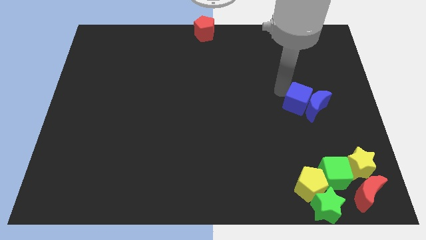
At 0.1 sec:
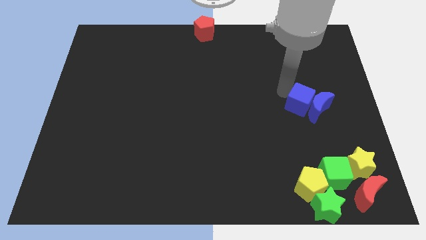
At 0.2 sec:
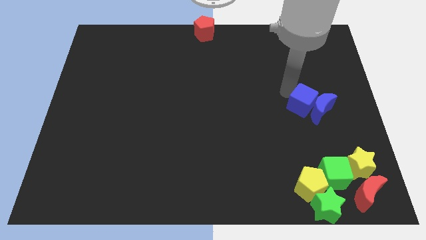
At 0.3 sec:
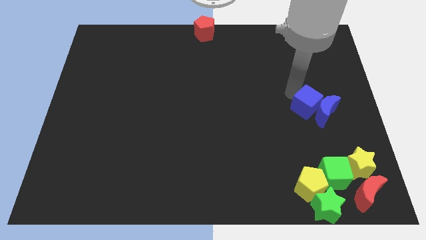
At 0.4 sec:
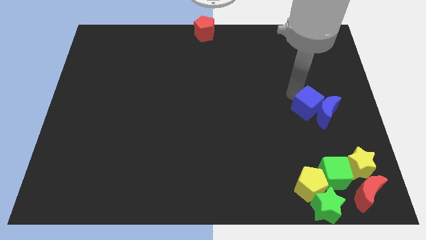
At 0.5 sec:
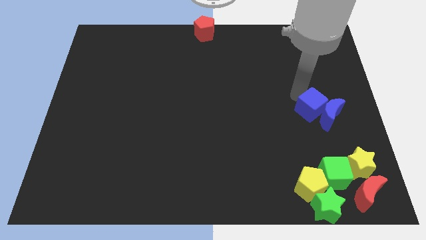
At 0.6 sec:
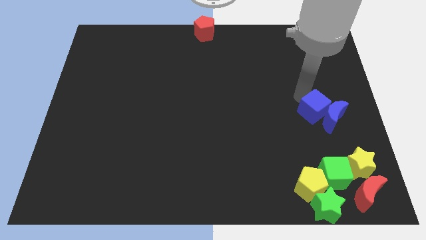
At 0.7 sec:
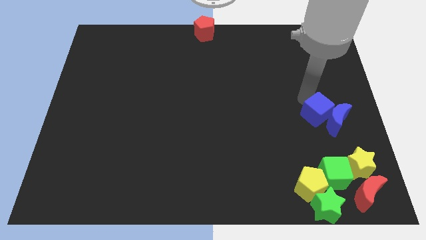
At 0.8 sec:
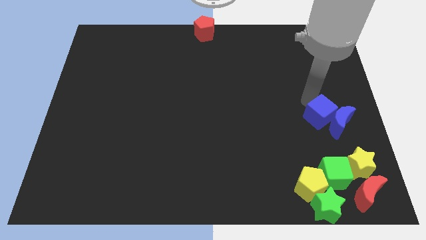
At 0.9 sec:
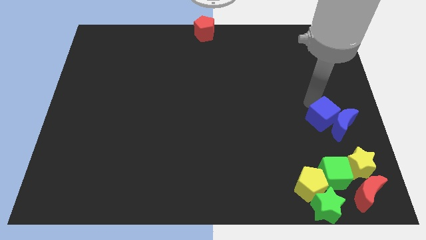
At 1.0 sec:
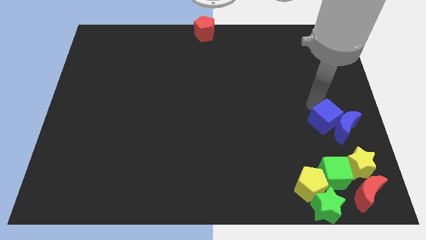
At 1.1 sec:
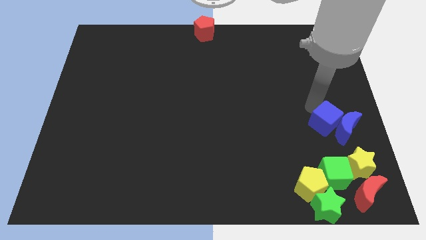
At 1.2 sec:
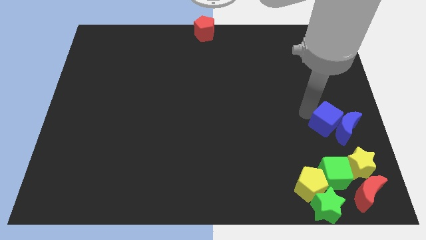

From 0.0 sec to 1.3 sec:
move the blue cube and blue crescent towards the bottom left center of the board

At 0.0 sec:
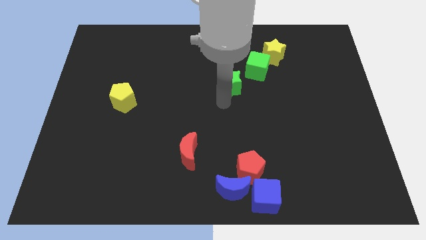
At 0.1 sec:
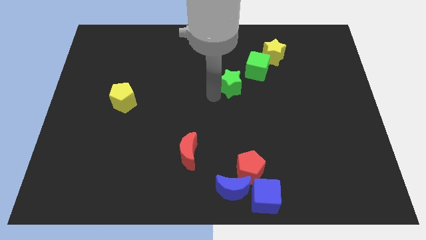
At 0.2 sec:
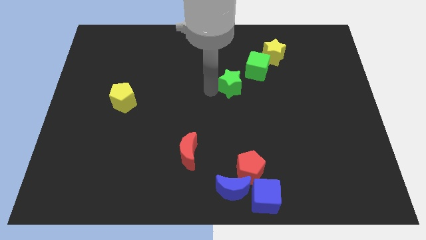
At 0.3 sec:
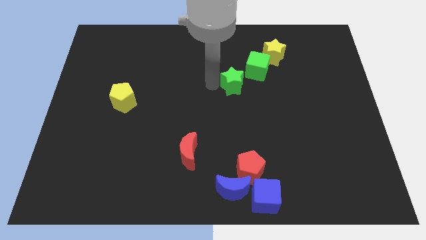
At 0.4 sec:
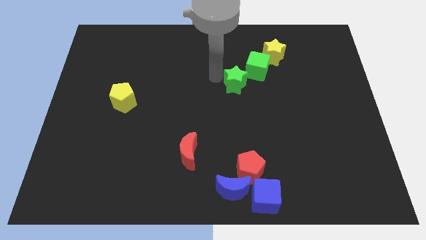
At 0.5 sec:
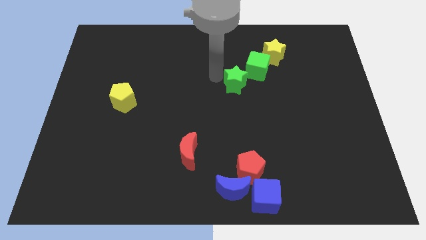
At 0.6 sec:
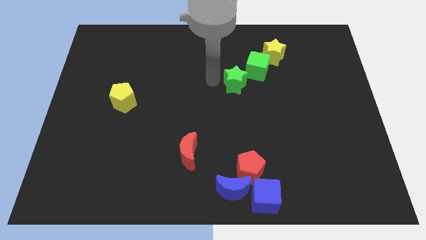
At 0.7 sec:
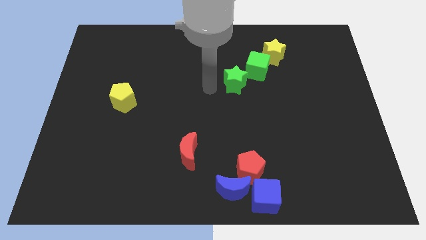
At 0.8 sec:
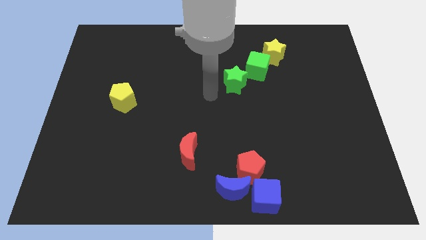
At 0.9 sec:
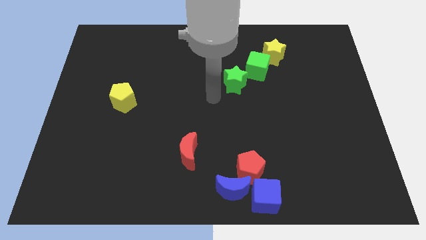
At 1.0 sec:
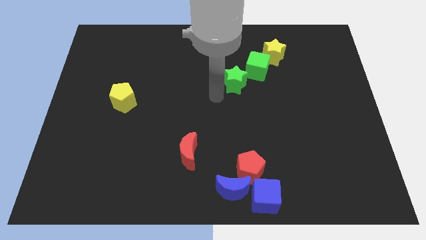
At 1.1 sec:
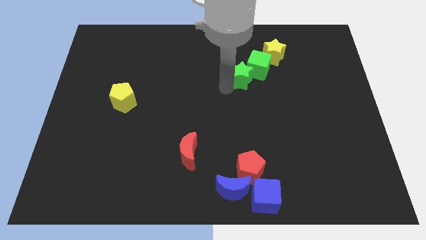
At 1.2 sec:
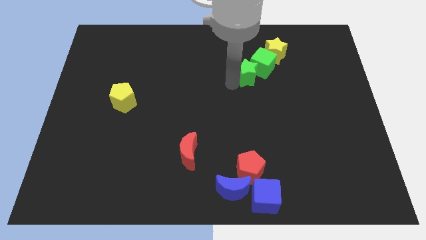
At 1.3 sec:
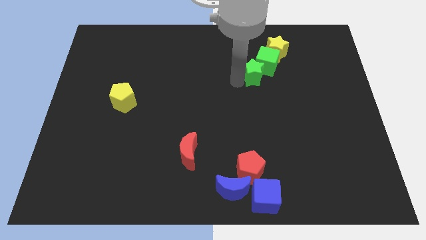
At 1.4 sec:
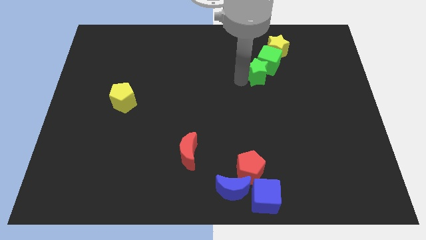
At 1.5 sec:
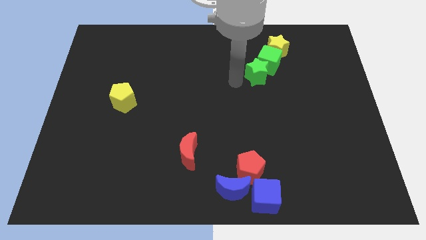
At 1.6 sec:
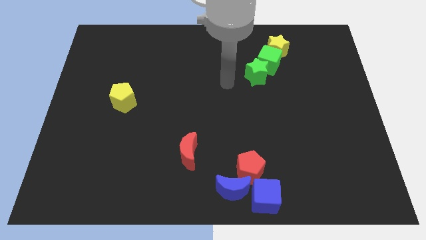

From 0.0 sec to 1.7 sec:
push green star into green cube

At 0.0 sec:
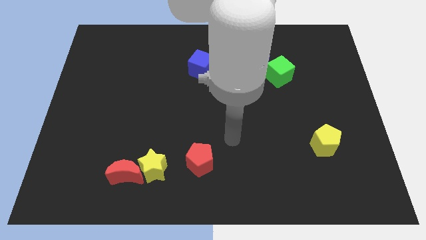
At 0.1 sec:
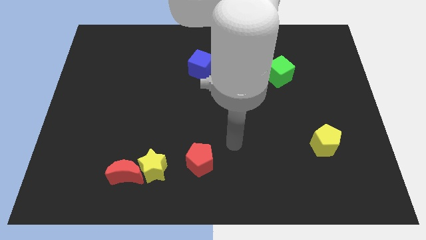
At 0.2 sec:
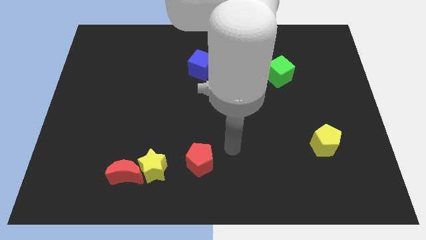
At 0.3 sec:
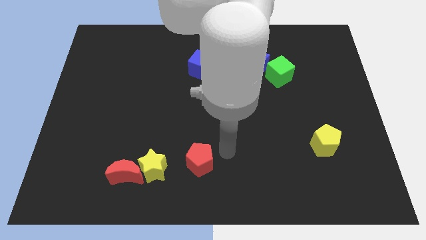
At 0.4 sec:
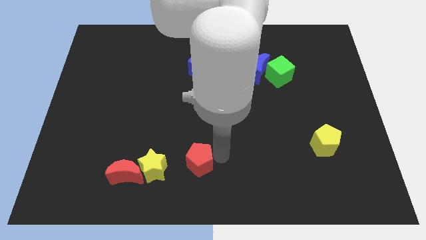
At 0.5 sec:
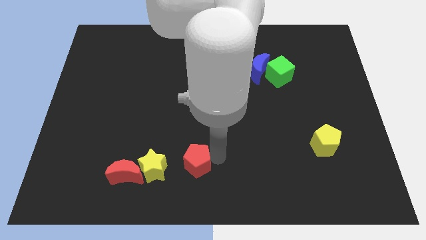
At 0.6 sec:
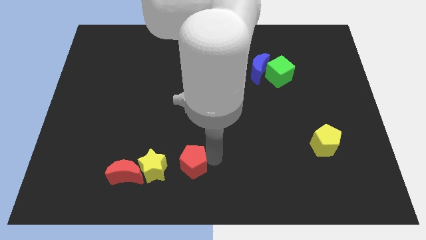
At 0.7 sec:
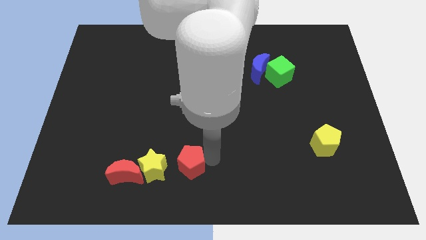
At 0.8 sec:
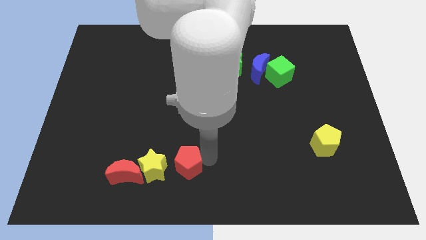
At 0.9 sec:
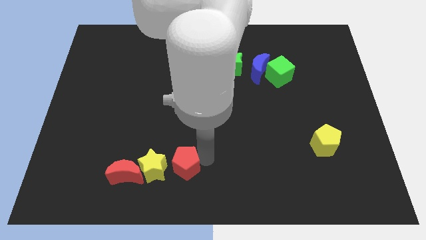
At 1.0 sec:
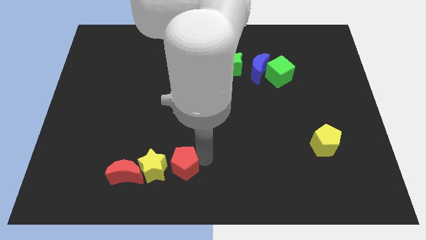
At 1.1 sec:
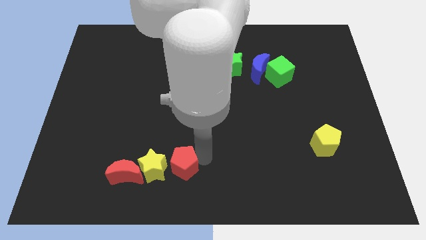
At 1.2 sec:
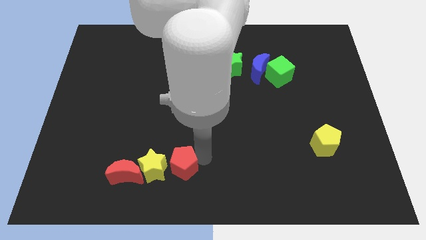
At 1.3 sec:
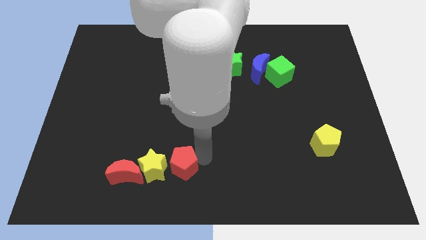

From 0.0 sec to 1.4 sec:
place the red pentagon next to the yellow star

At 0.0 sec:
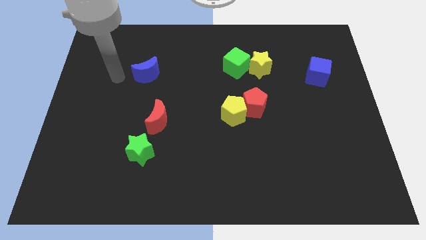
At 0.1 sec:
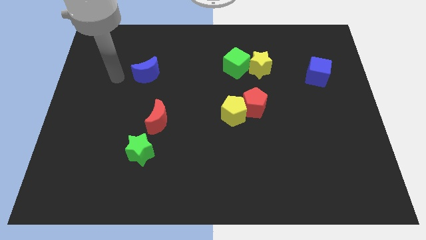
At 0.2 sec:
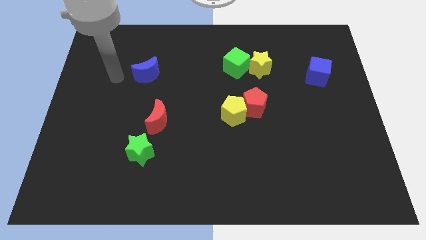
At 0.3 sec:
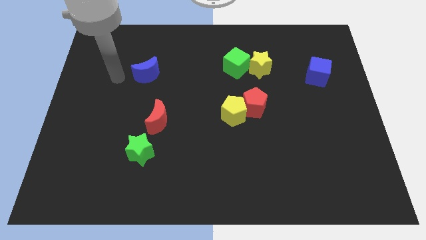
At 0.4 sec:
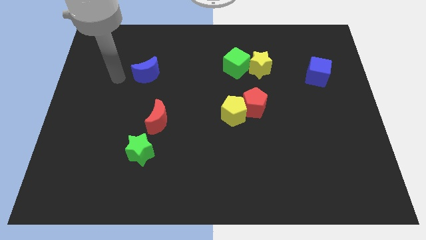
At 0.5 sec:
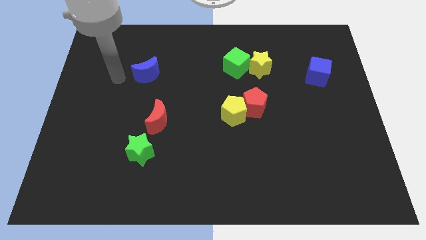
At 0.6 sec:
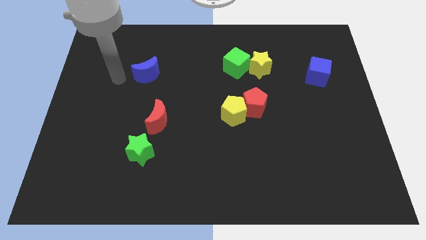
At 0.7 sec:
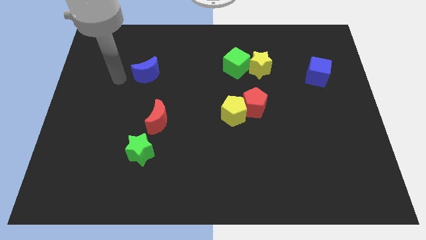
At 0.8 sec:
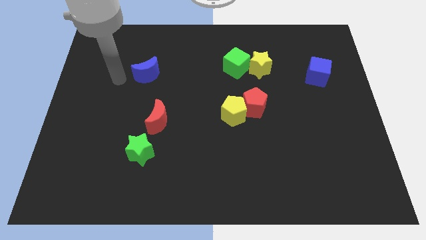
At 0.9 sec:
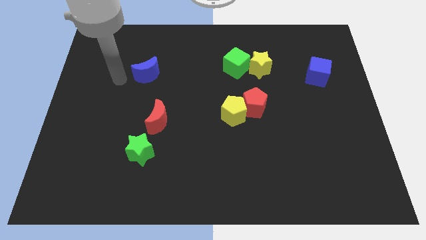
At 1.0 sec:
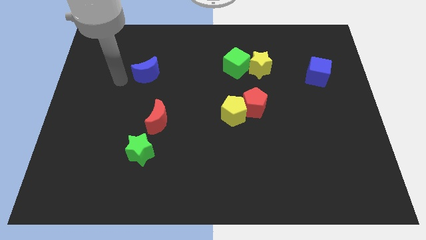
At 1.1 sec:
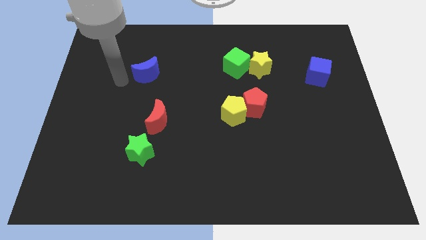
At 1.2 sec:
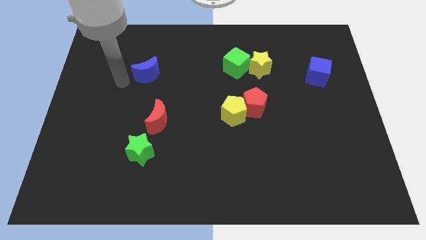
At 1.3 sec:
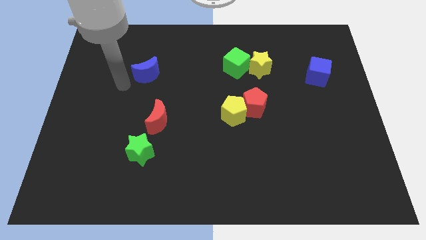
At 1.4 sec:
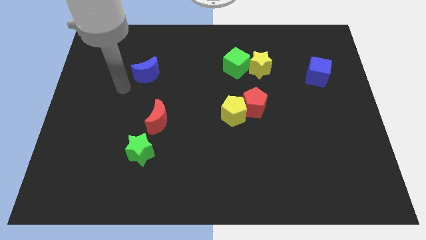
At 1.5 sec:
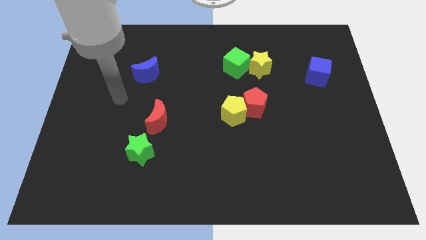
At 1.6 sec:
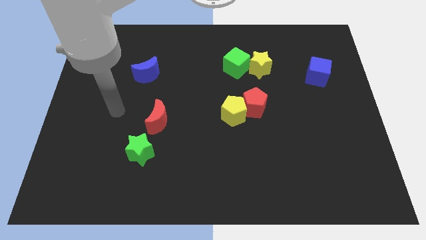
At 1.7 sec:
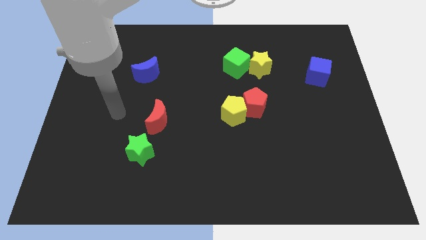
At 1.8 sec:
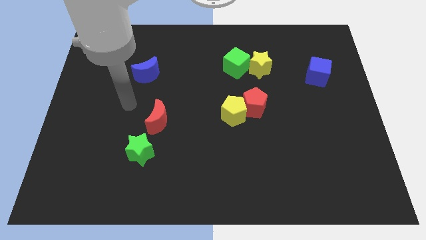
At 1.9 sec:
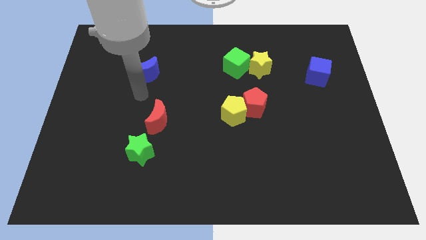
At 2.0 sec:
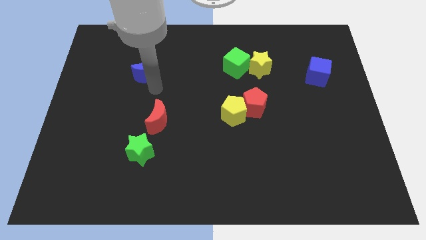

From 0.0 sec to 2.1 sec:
put your hand vertically below the blue crescent

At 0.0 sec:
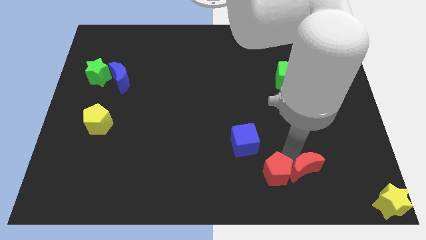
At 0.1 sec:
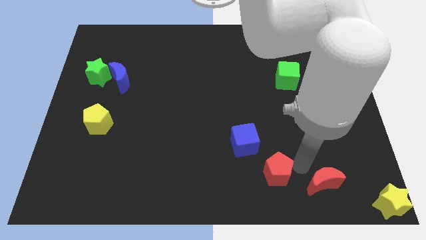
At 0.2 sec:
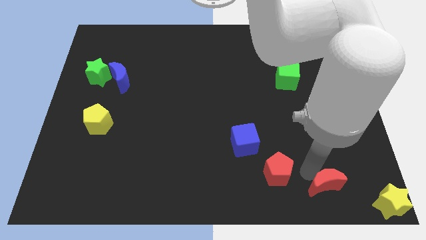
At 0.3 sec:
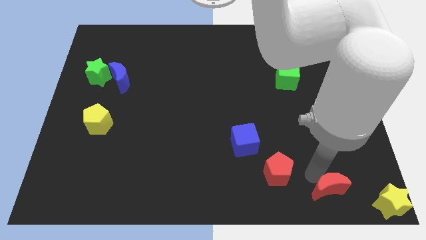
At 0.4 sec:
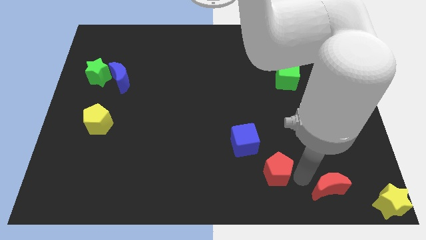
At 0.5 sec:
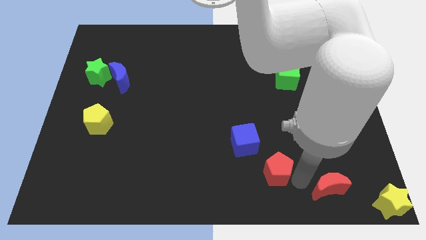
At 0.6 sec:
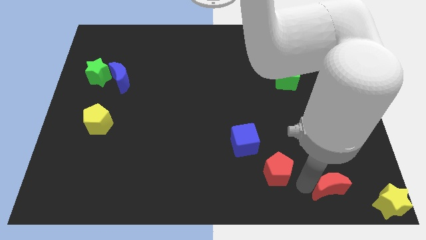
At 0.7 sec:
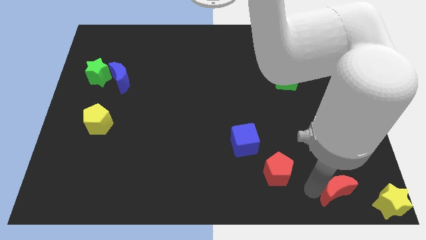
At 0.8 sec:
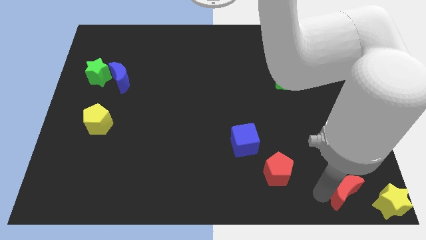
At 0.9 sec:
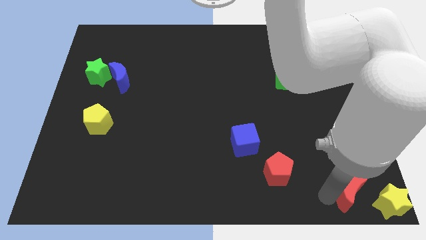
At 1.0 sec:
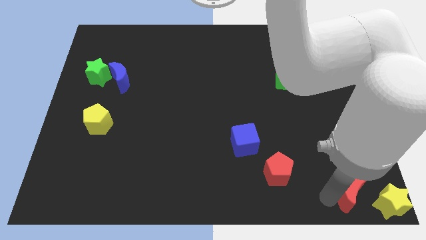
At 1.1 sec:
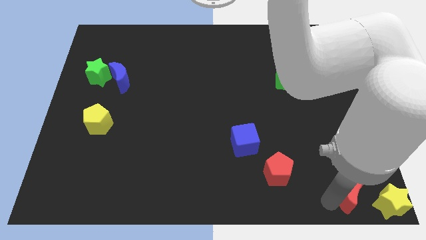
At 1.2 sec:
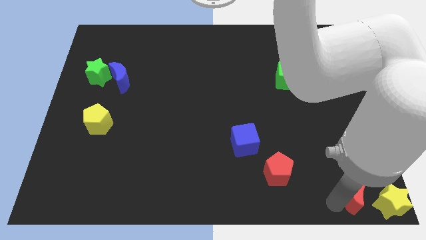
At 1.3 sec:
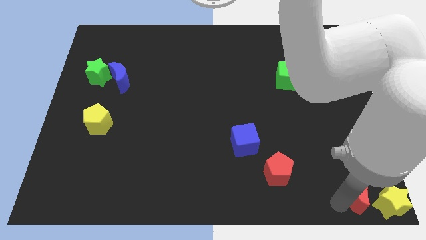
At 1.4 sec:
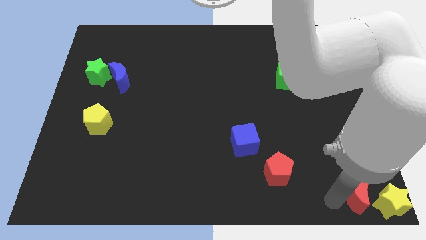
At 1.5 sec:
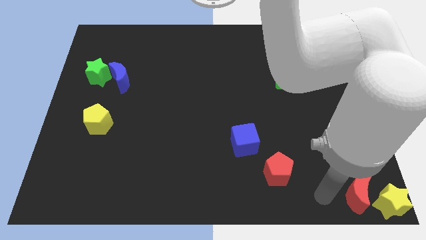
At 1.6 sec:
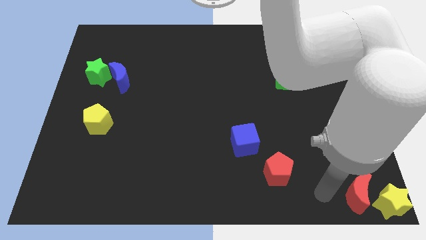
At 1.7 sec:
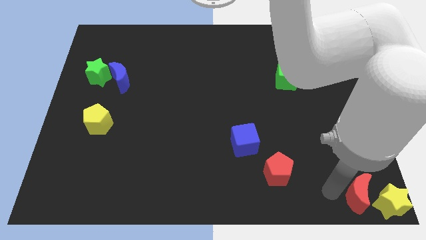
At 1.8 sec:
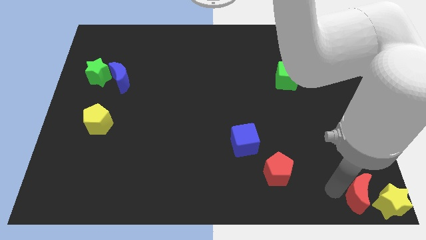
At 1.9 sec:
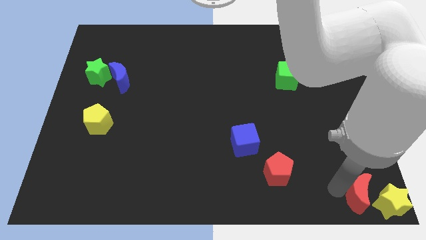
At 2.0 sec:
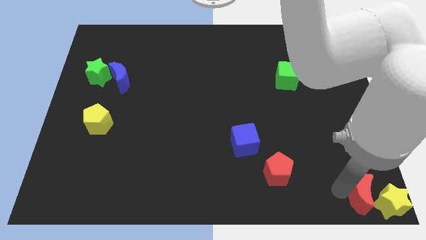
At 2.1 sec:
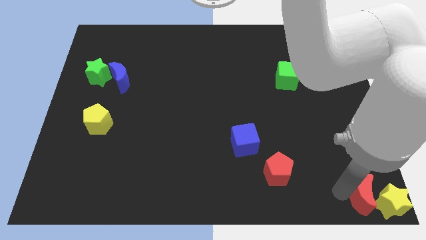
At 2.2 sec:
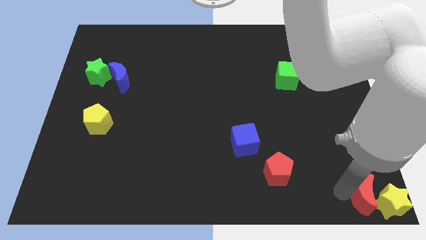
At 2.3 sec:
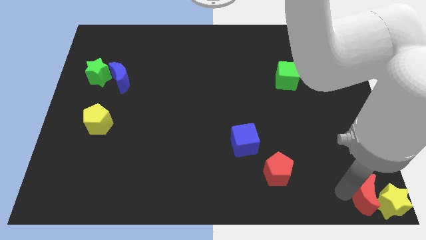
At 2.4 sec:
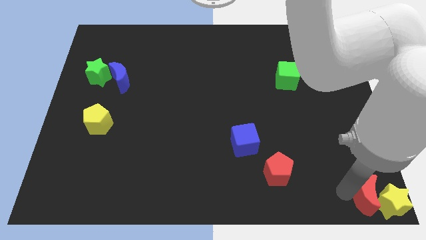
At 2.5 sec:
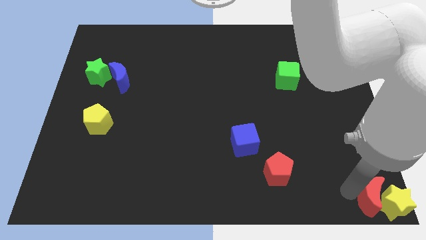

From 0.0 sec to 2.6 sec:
place red crescent adjacent to yellow star
